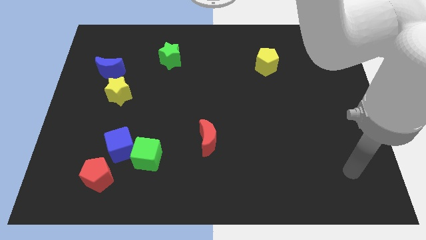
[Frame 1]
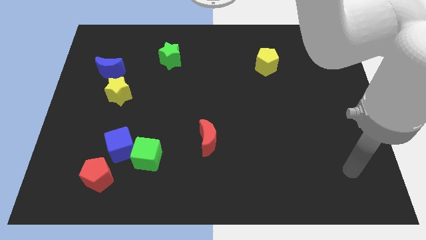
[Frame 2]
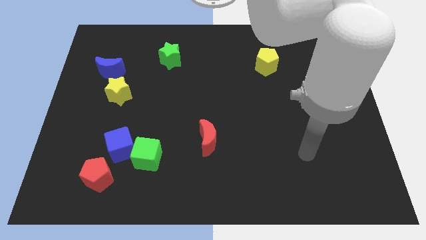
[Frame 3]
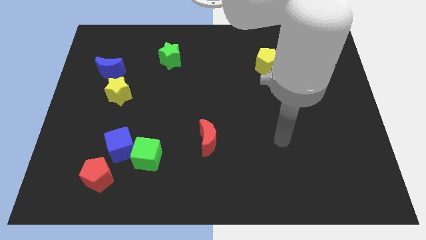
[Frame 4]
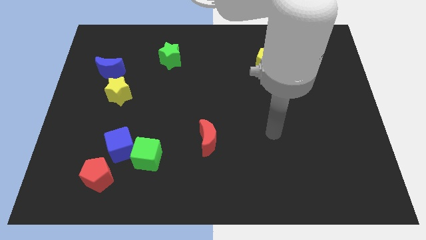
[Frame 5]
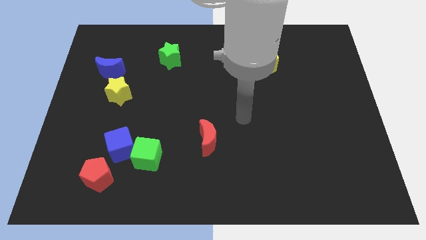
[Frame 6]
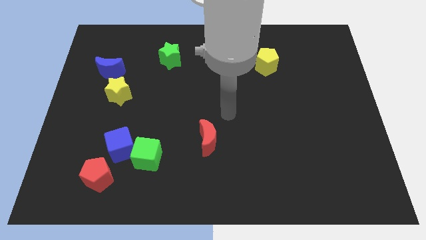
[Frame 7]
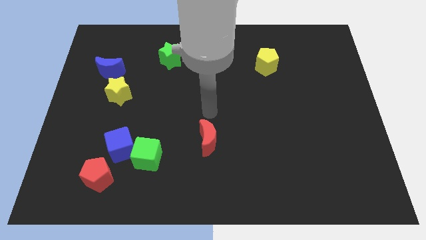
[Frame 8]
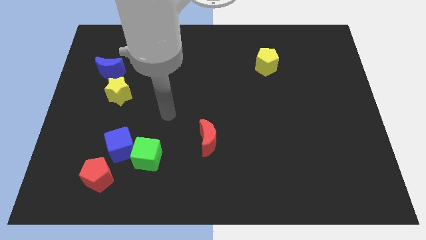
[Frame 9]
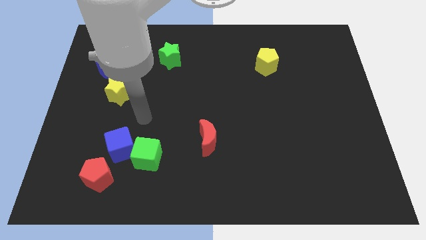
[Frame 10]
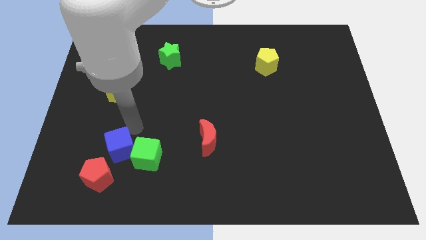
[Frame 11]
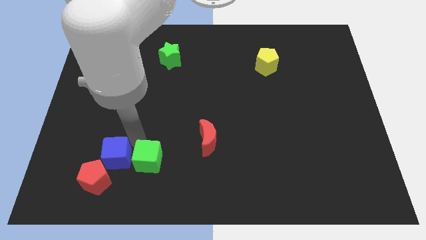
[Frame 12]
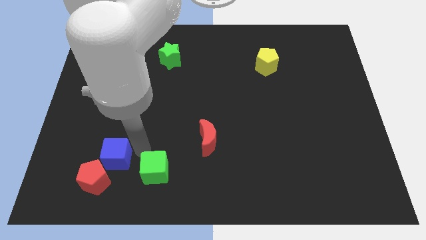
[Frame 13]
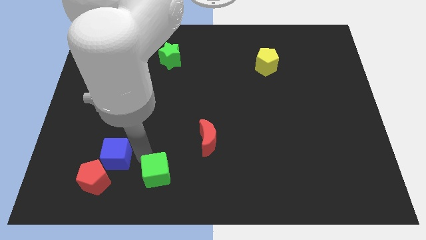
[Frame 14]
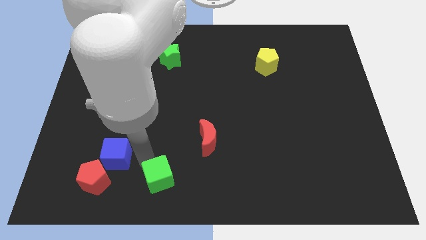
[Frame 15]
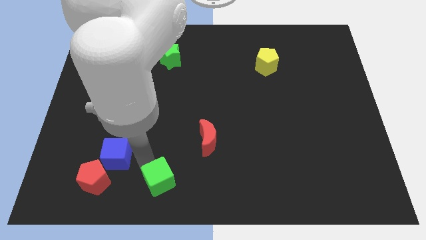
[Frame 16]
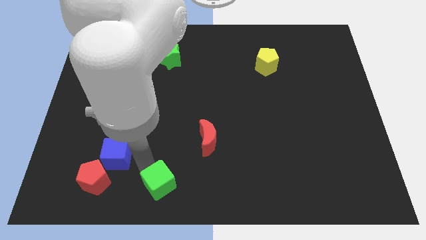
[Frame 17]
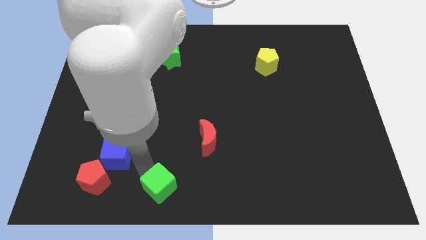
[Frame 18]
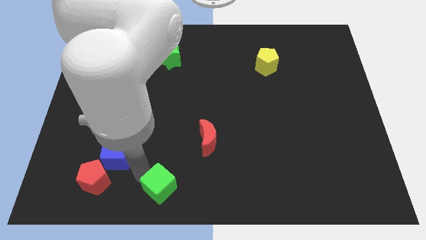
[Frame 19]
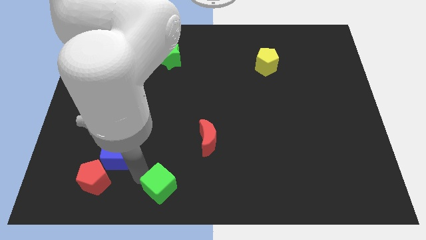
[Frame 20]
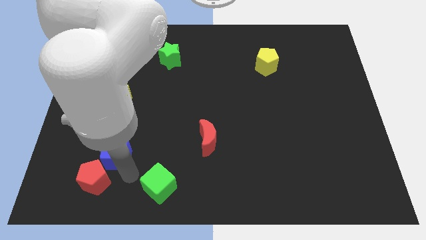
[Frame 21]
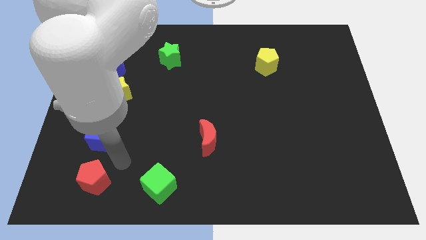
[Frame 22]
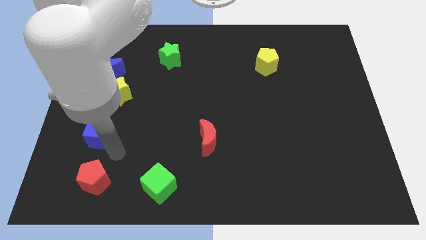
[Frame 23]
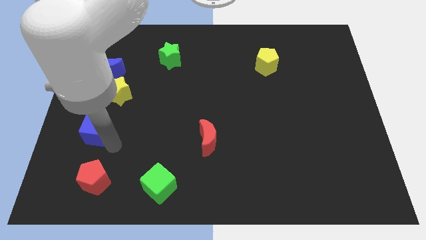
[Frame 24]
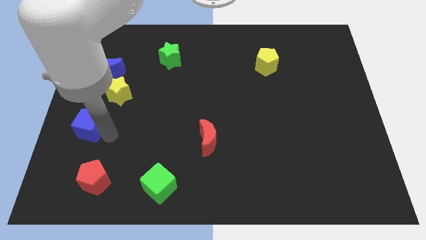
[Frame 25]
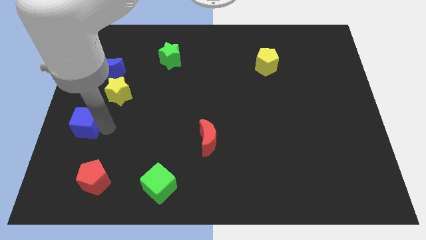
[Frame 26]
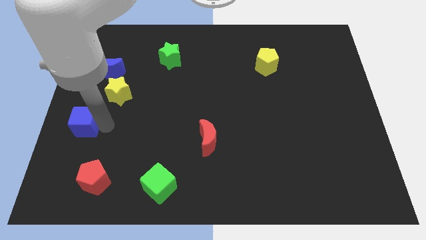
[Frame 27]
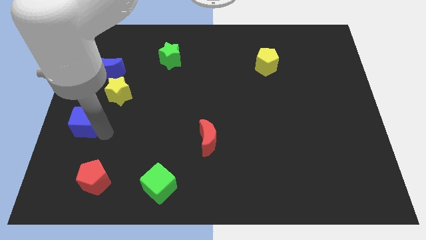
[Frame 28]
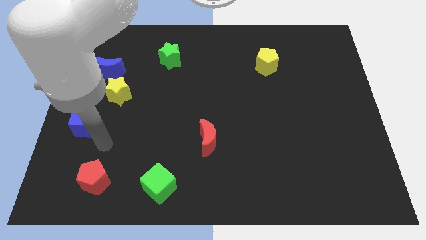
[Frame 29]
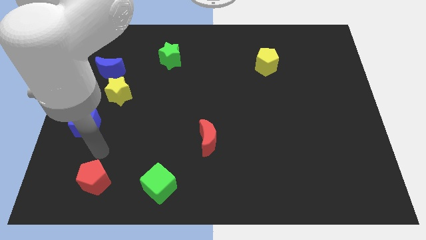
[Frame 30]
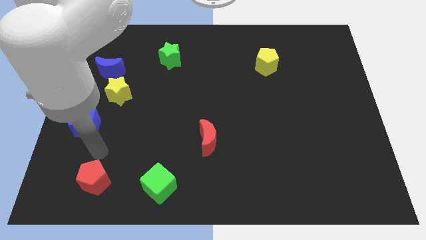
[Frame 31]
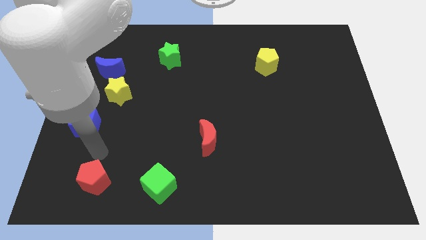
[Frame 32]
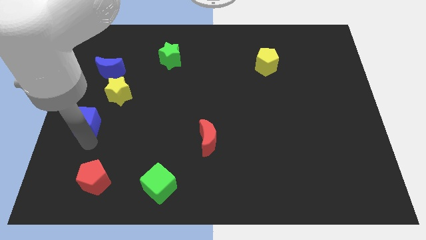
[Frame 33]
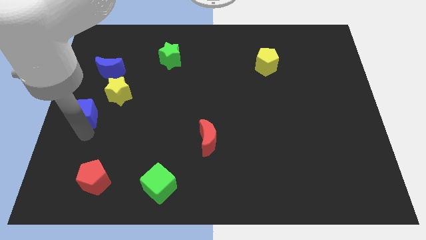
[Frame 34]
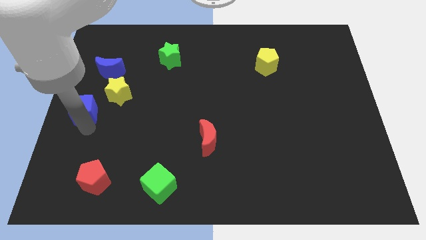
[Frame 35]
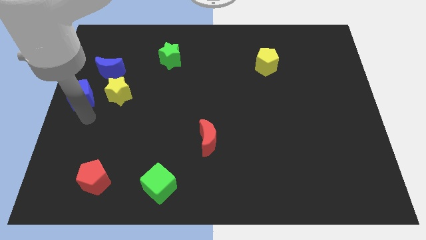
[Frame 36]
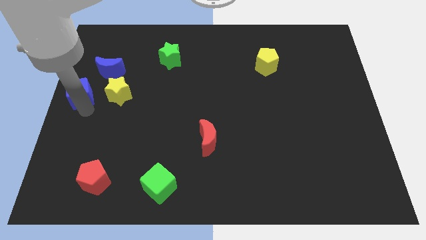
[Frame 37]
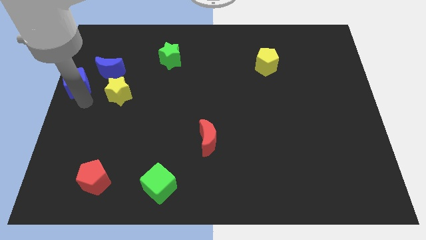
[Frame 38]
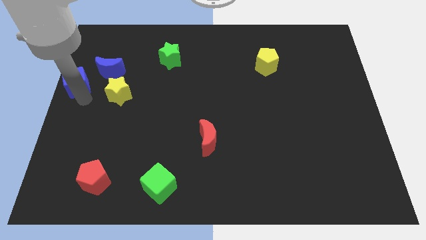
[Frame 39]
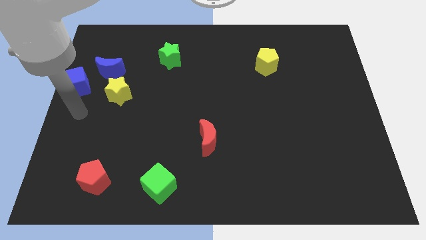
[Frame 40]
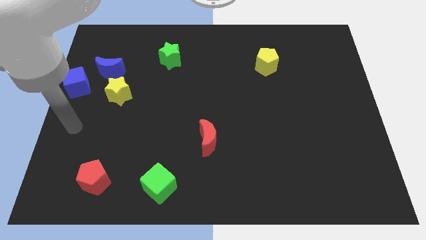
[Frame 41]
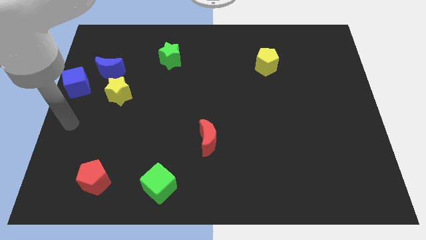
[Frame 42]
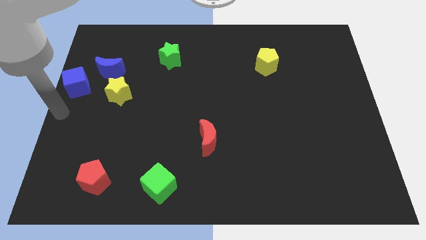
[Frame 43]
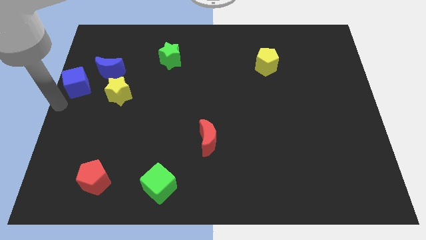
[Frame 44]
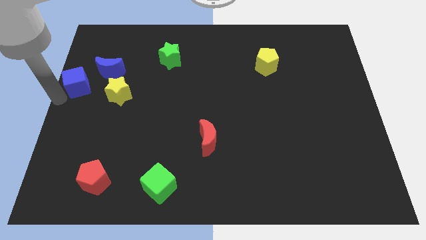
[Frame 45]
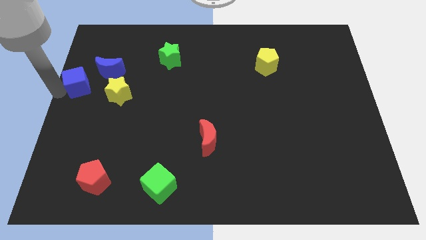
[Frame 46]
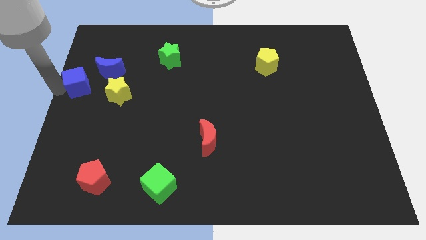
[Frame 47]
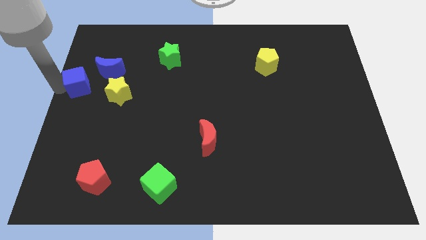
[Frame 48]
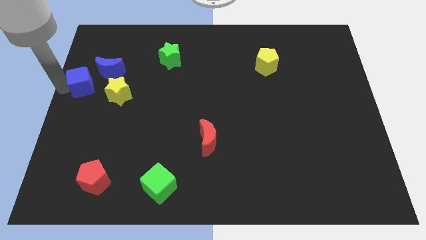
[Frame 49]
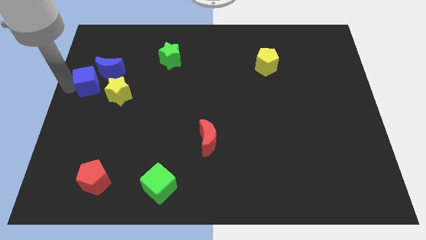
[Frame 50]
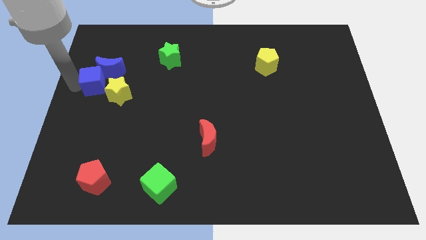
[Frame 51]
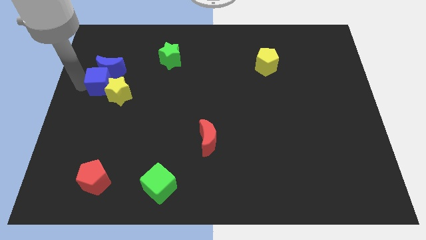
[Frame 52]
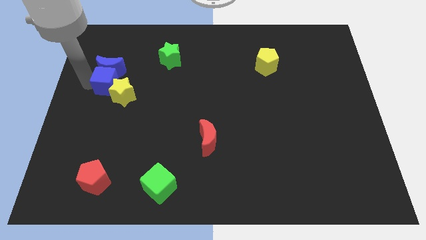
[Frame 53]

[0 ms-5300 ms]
slide the blue cube next to the blue moon

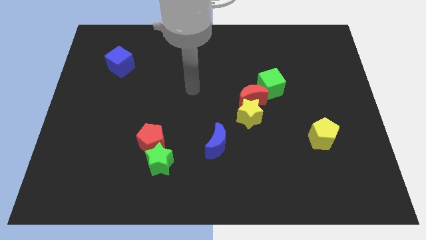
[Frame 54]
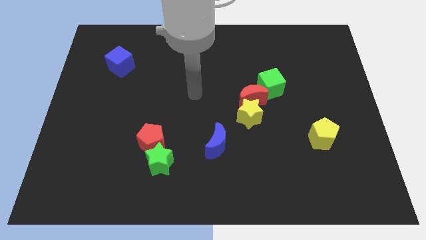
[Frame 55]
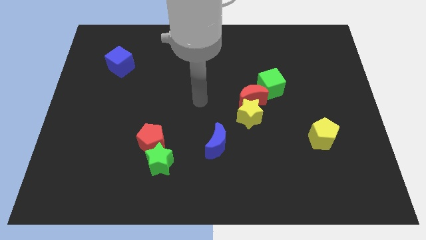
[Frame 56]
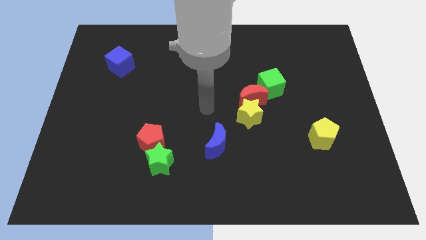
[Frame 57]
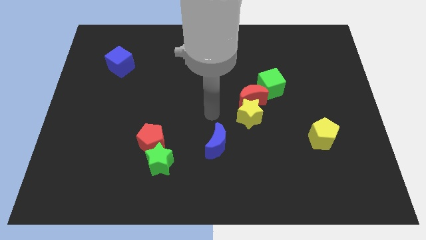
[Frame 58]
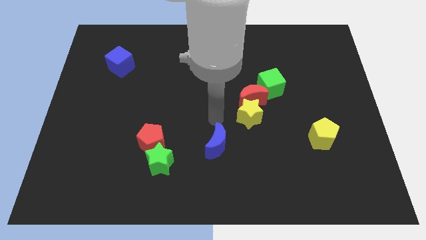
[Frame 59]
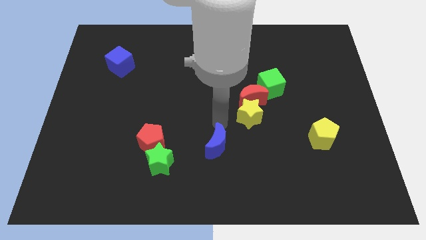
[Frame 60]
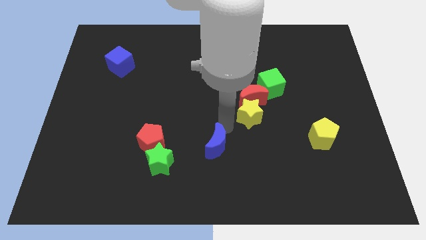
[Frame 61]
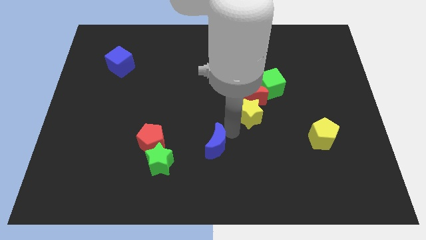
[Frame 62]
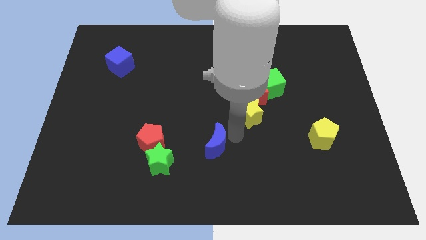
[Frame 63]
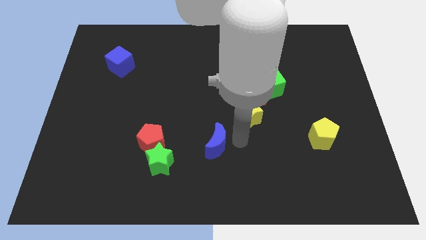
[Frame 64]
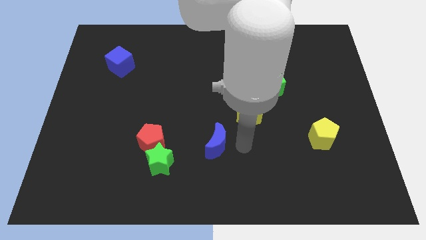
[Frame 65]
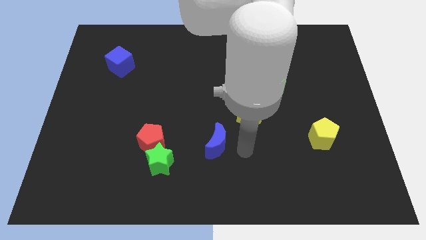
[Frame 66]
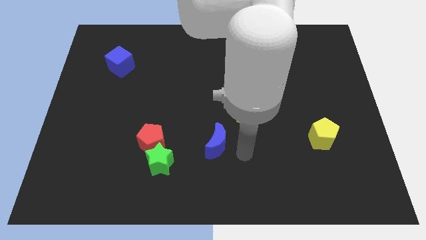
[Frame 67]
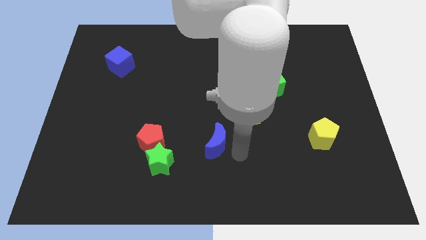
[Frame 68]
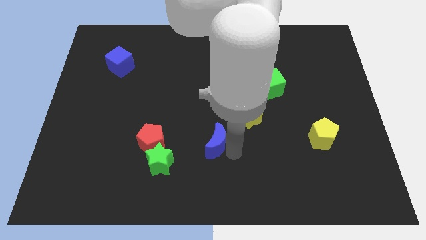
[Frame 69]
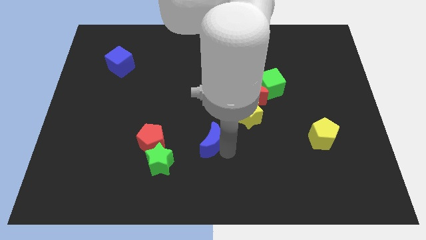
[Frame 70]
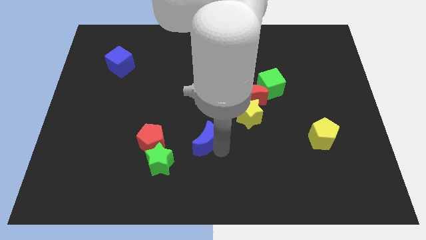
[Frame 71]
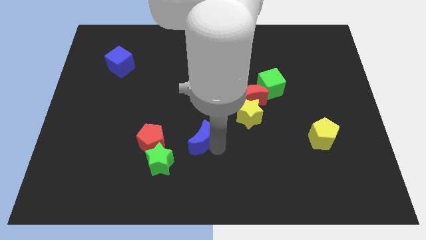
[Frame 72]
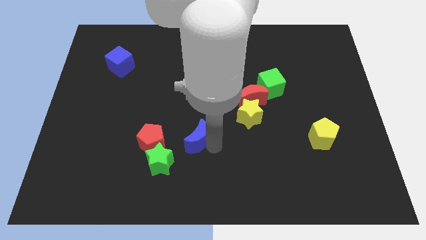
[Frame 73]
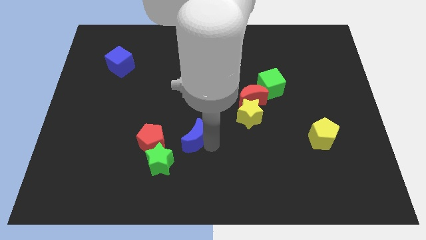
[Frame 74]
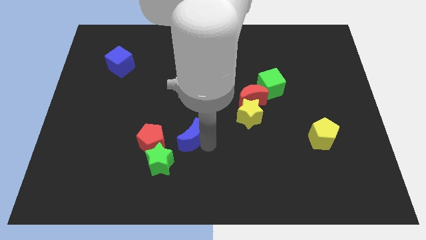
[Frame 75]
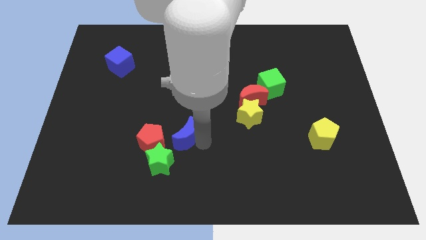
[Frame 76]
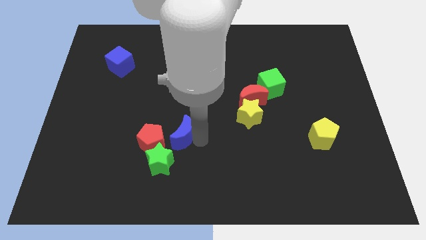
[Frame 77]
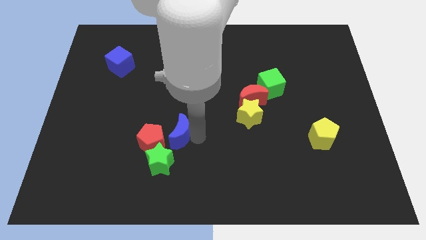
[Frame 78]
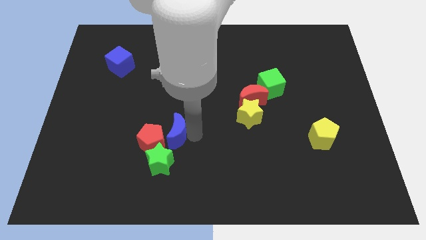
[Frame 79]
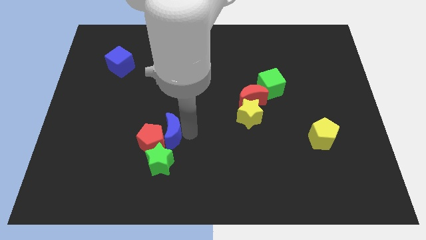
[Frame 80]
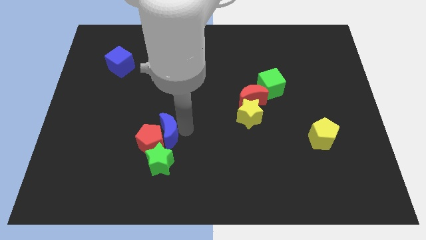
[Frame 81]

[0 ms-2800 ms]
put the blue moon towards the red pentagon

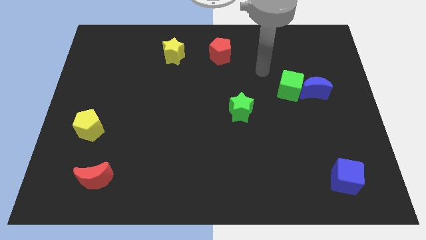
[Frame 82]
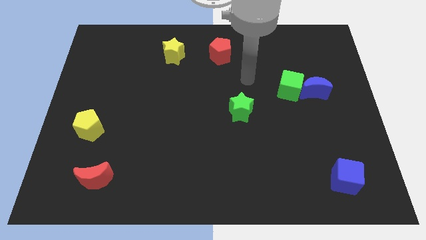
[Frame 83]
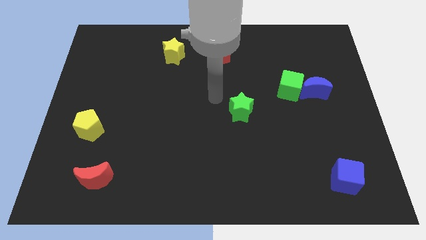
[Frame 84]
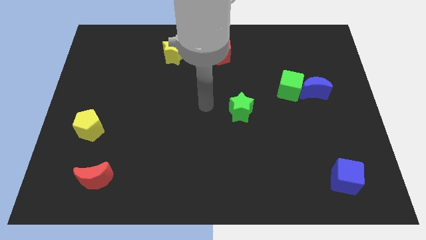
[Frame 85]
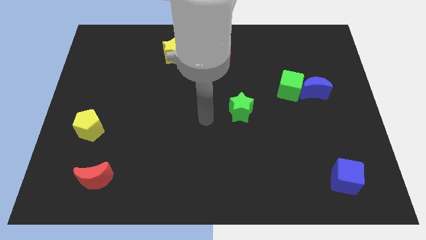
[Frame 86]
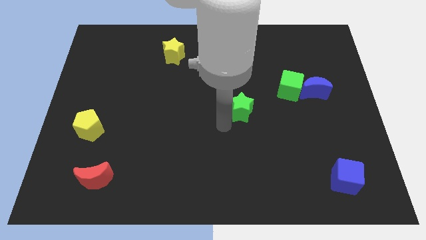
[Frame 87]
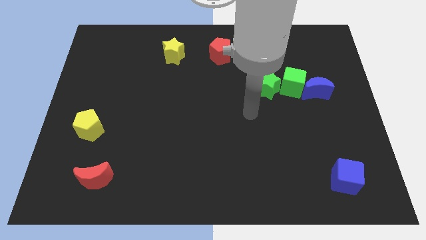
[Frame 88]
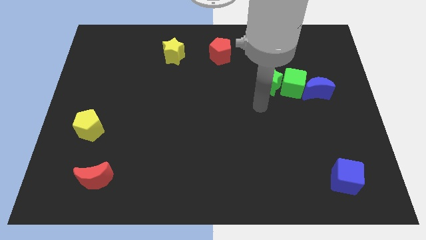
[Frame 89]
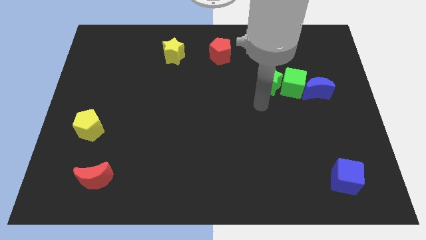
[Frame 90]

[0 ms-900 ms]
push the green star close to the green cube

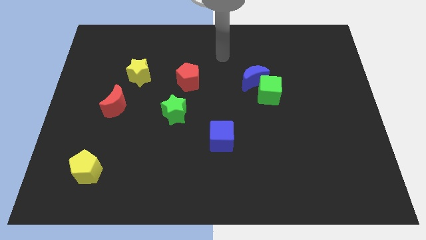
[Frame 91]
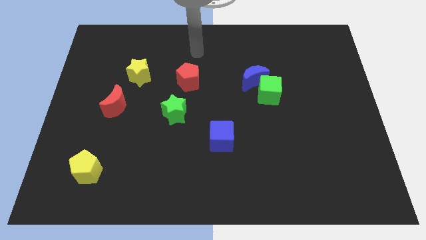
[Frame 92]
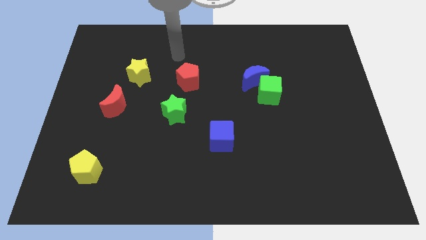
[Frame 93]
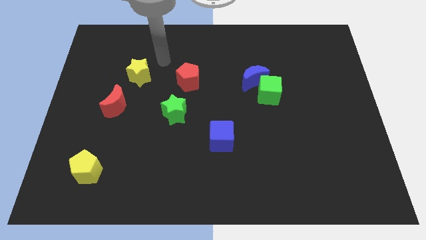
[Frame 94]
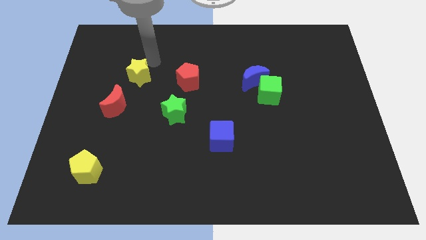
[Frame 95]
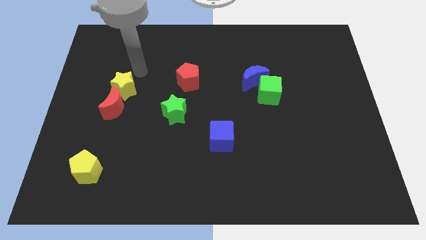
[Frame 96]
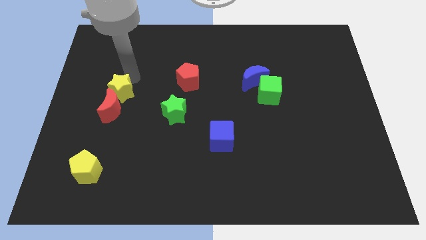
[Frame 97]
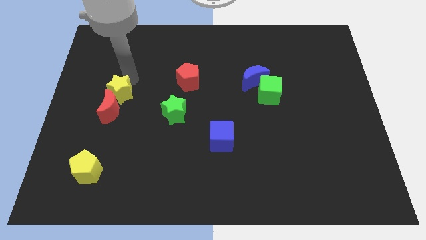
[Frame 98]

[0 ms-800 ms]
push the yellow star towards the red moon
